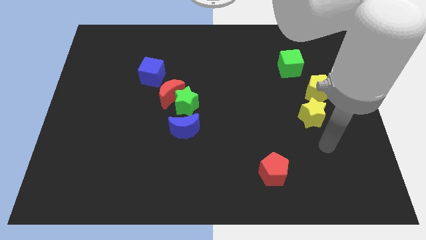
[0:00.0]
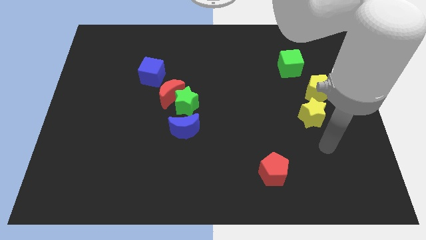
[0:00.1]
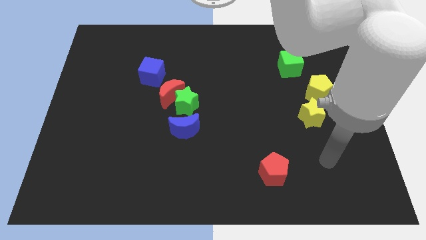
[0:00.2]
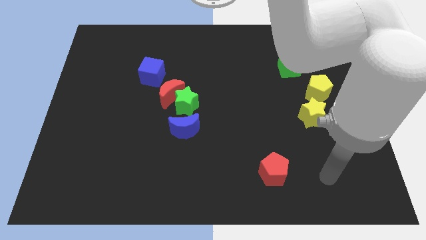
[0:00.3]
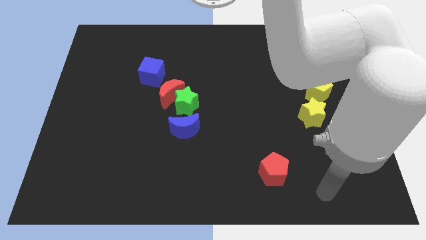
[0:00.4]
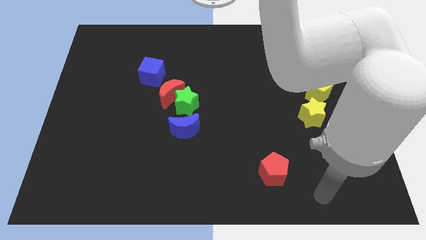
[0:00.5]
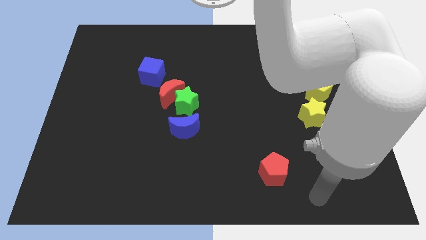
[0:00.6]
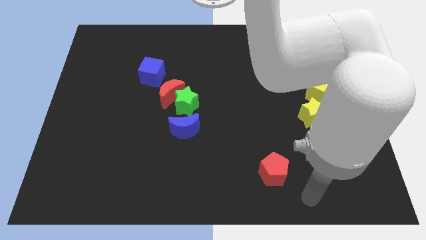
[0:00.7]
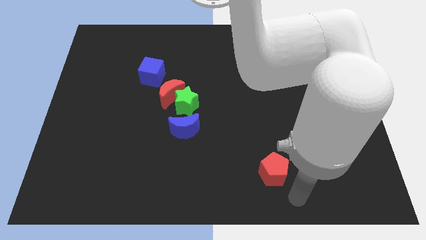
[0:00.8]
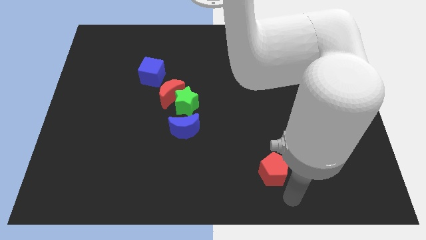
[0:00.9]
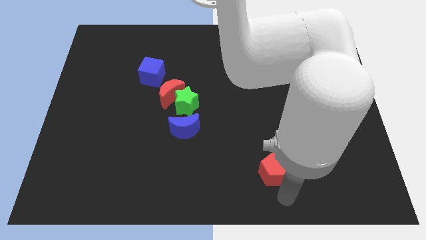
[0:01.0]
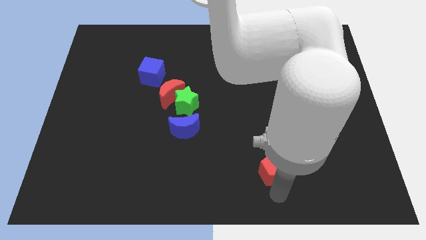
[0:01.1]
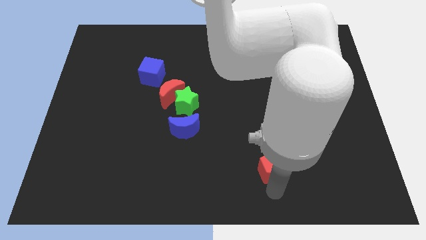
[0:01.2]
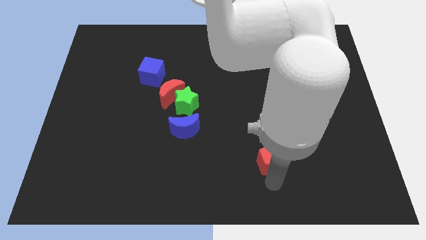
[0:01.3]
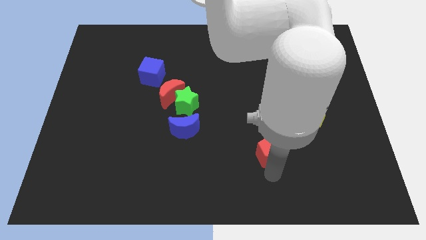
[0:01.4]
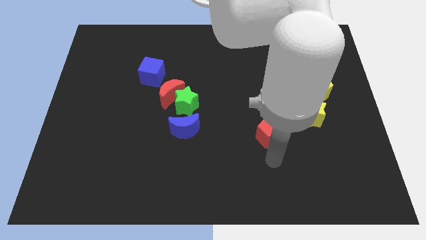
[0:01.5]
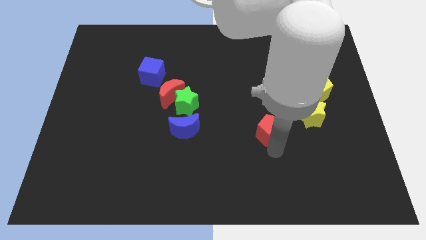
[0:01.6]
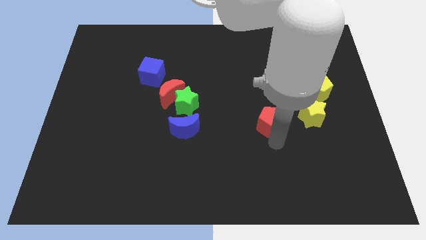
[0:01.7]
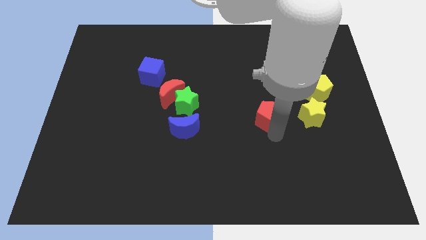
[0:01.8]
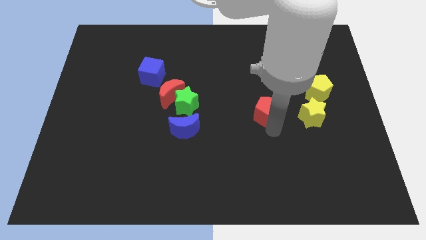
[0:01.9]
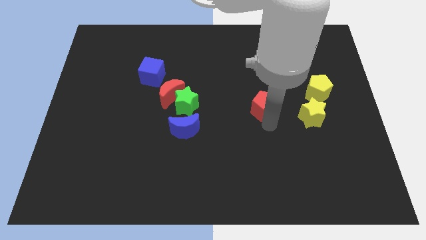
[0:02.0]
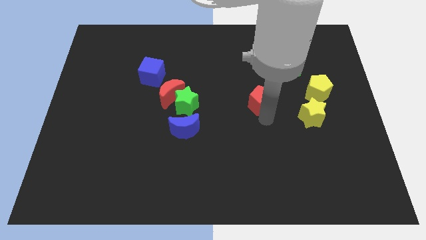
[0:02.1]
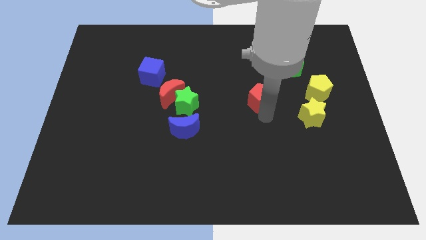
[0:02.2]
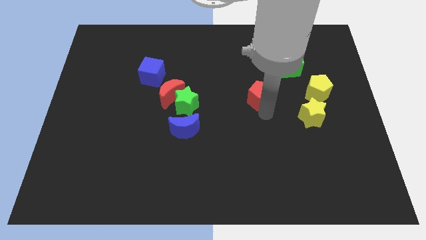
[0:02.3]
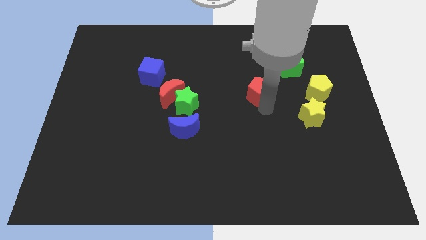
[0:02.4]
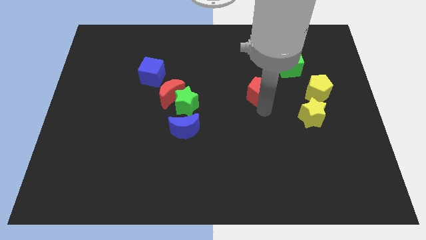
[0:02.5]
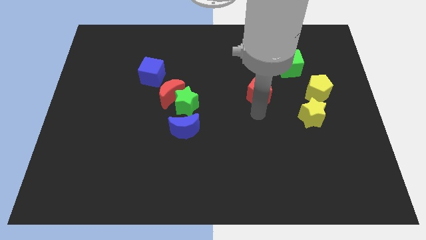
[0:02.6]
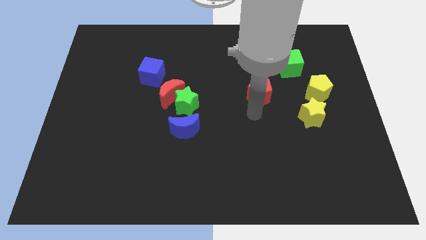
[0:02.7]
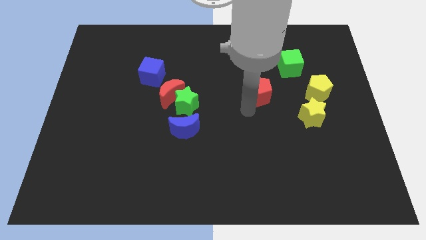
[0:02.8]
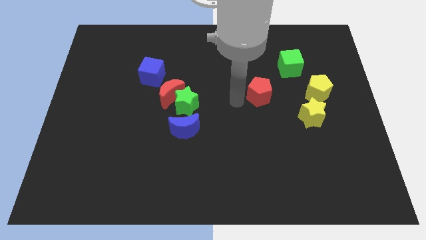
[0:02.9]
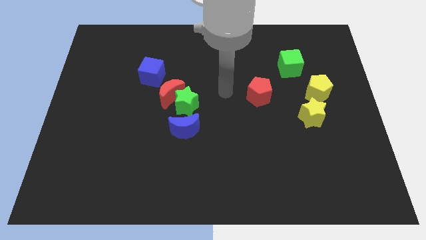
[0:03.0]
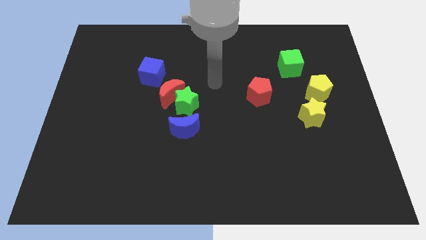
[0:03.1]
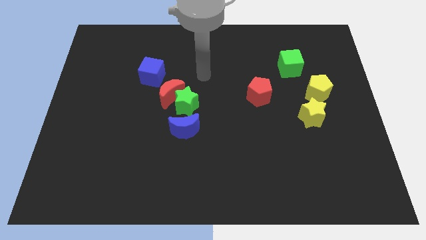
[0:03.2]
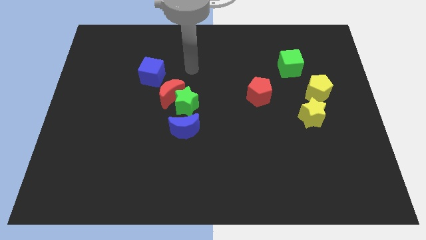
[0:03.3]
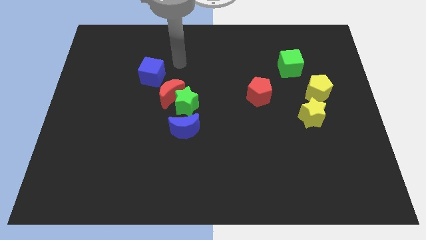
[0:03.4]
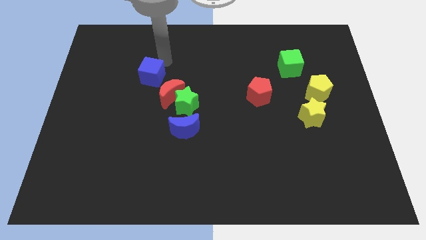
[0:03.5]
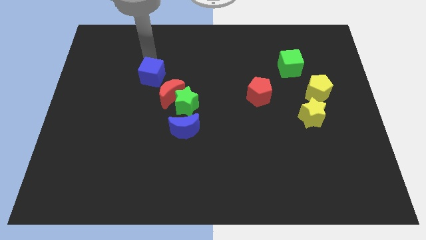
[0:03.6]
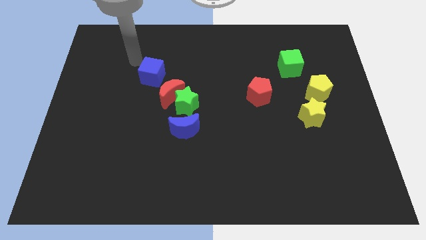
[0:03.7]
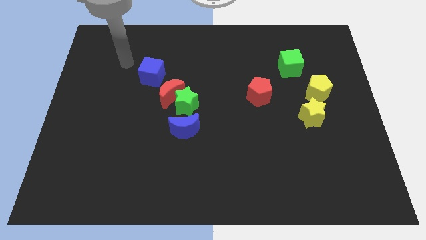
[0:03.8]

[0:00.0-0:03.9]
point your arm above the blue cube

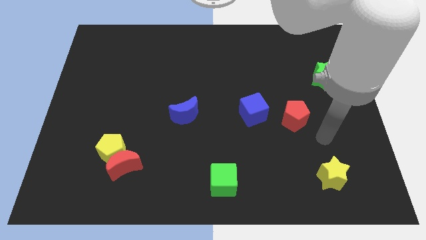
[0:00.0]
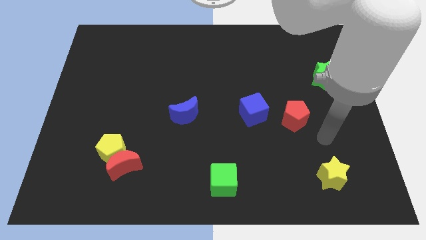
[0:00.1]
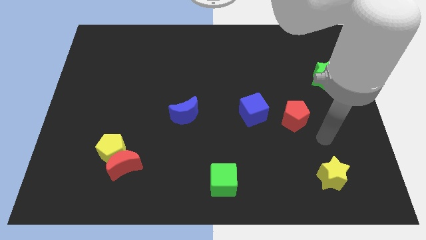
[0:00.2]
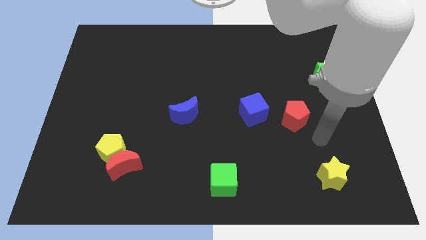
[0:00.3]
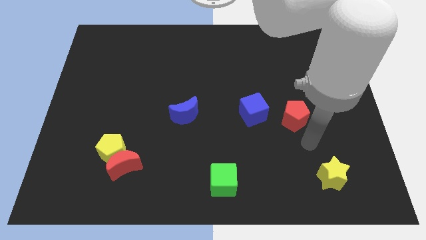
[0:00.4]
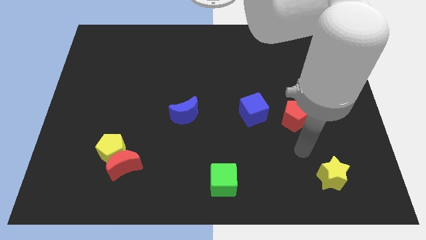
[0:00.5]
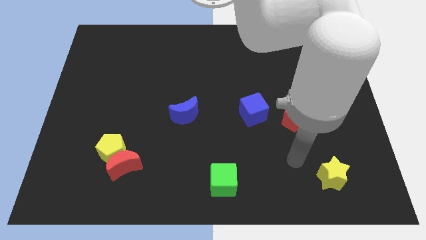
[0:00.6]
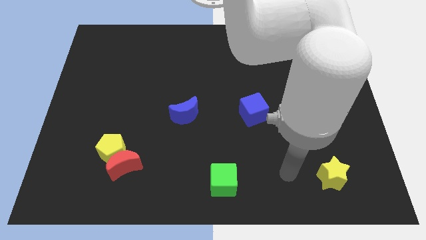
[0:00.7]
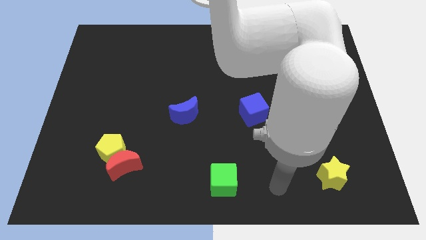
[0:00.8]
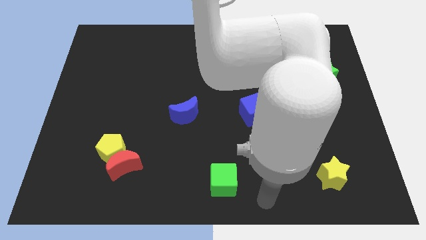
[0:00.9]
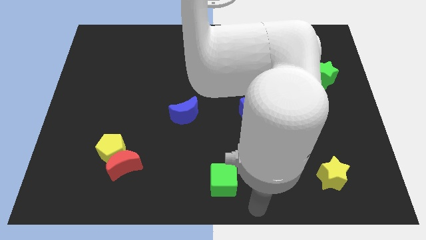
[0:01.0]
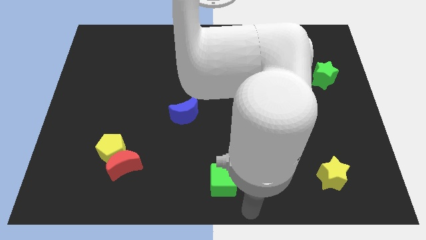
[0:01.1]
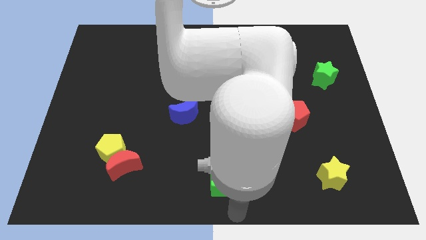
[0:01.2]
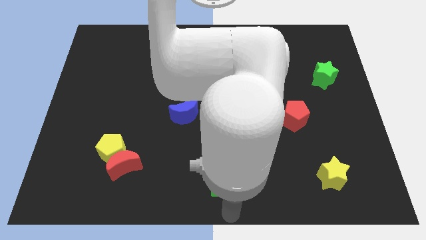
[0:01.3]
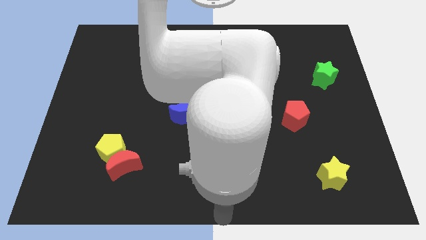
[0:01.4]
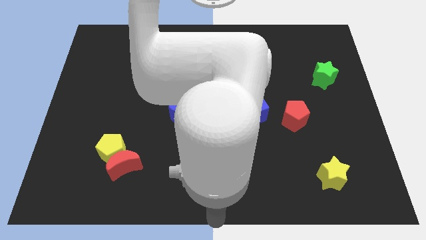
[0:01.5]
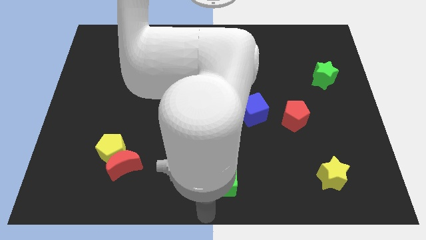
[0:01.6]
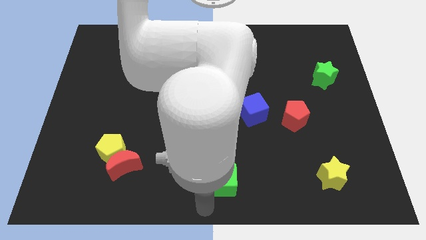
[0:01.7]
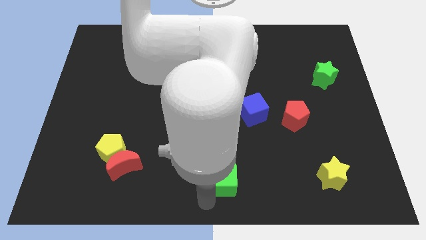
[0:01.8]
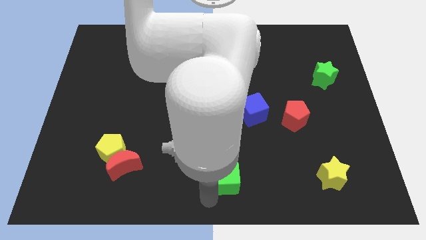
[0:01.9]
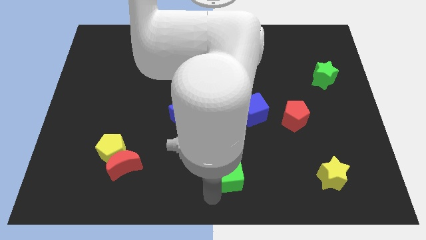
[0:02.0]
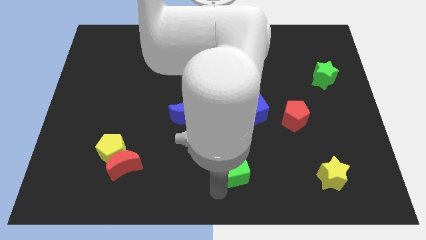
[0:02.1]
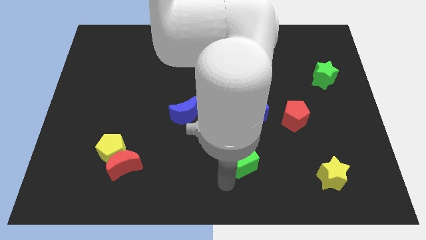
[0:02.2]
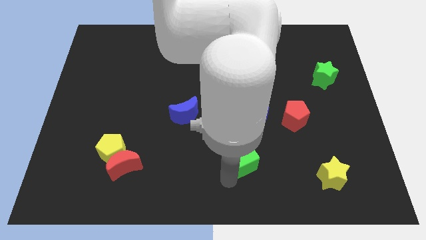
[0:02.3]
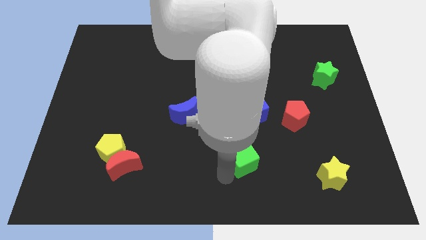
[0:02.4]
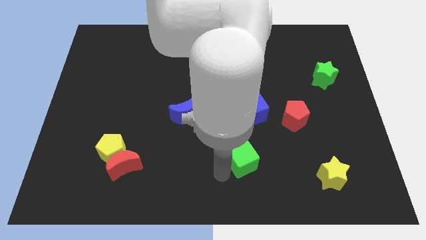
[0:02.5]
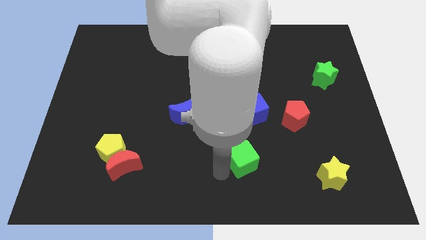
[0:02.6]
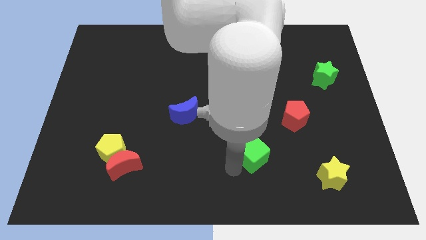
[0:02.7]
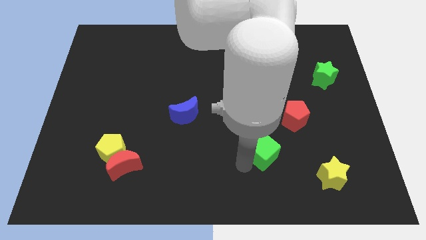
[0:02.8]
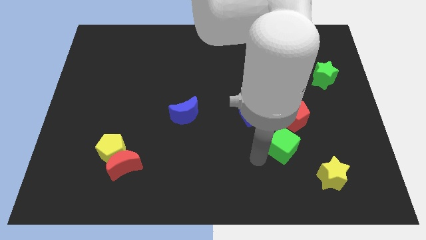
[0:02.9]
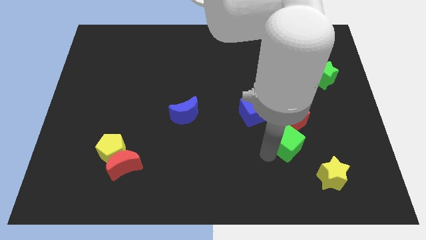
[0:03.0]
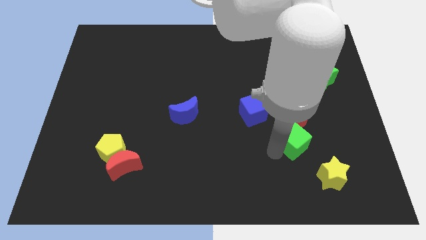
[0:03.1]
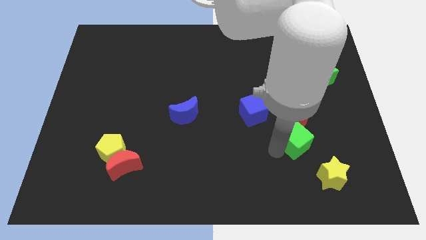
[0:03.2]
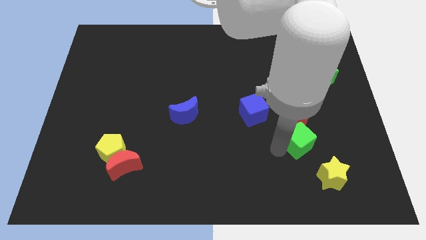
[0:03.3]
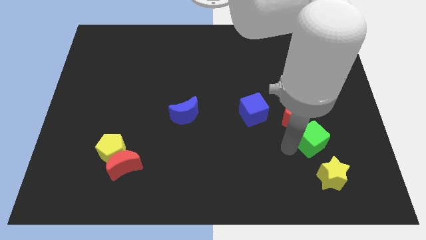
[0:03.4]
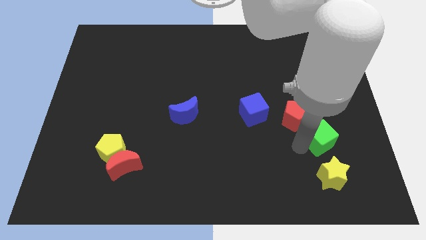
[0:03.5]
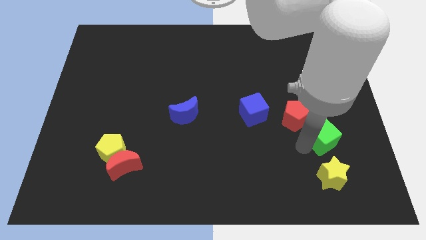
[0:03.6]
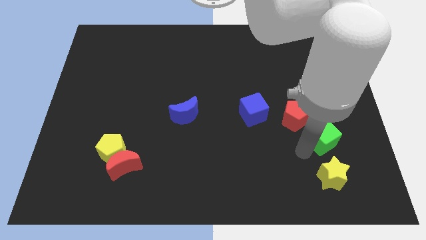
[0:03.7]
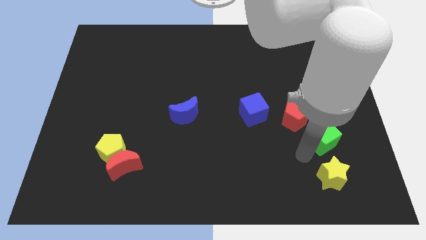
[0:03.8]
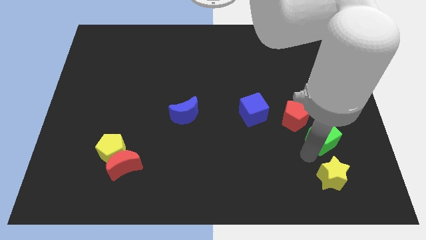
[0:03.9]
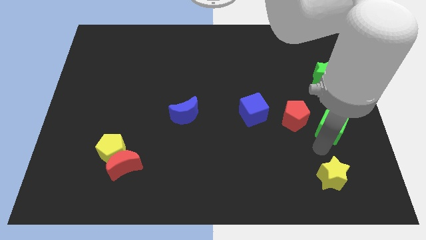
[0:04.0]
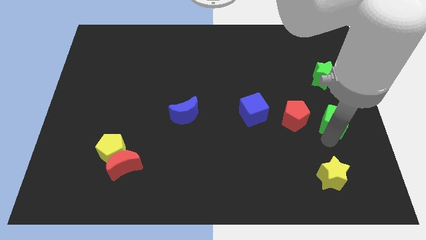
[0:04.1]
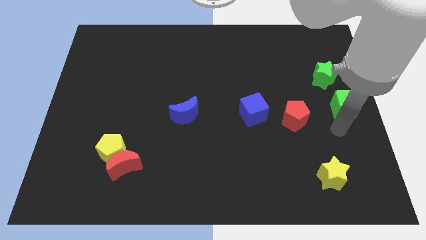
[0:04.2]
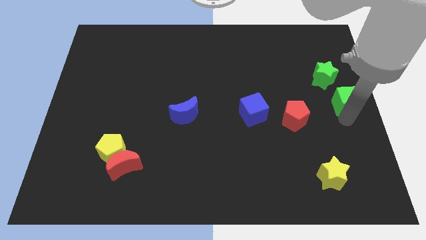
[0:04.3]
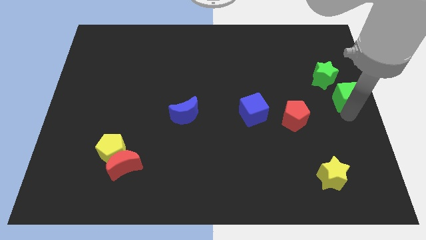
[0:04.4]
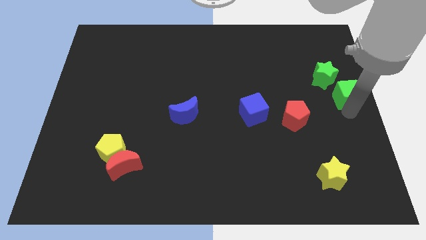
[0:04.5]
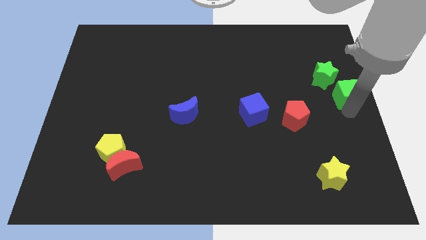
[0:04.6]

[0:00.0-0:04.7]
push the green cube to the right center of the board

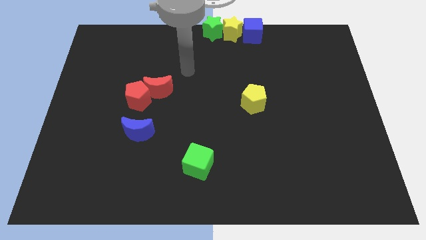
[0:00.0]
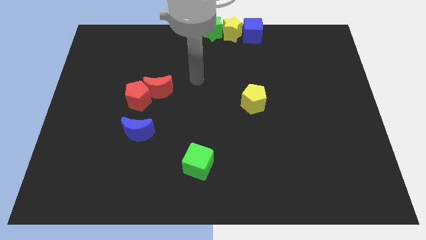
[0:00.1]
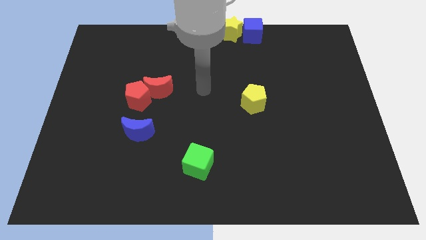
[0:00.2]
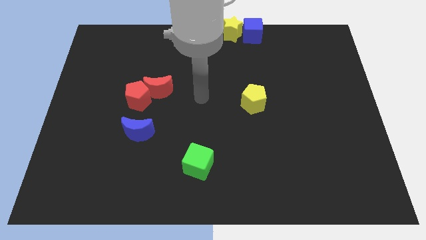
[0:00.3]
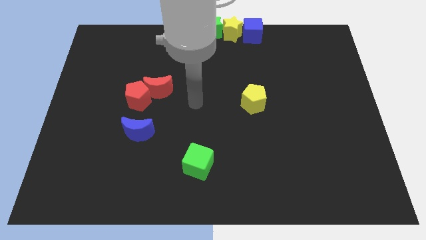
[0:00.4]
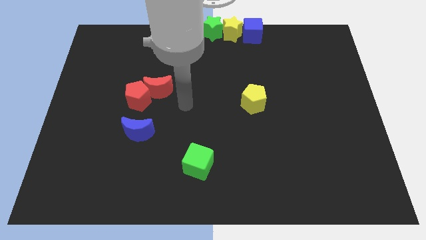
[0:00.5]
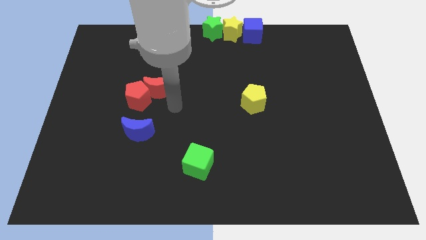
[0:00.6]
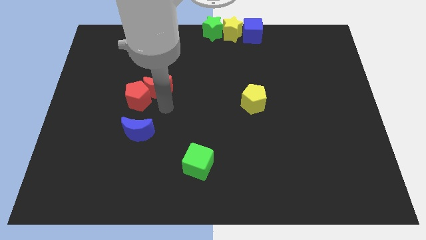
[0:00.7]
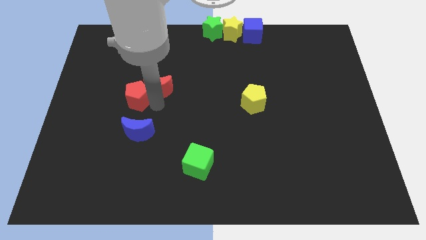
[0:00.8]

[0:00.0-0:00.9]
place arm below red crescent
